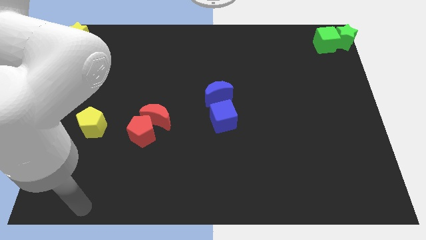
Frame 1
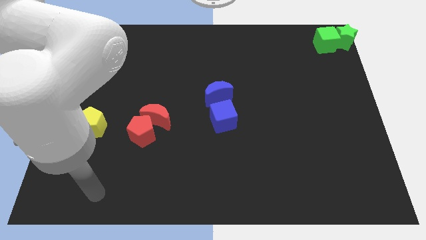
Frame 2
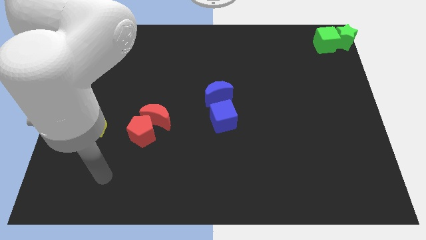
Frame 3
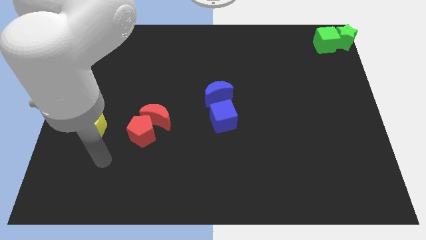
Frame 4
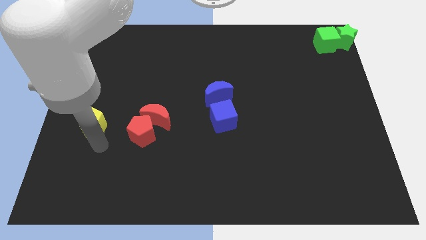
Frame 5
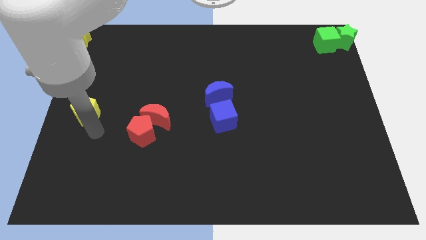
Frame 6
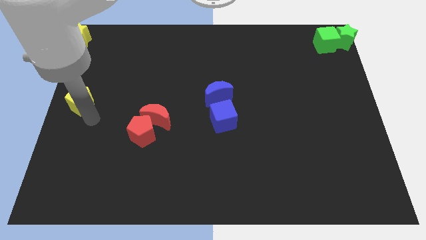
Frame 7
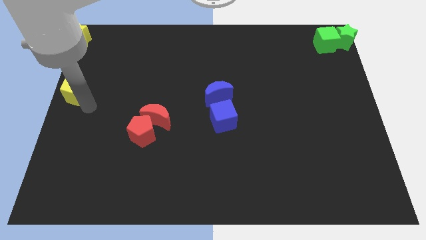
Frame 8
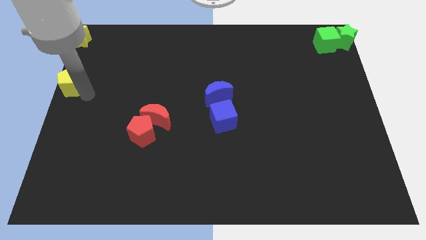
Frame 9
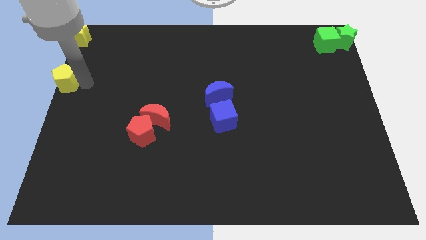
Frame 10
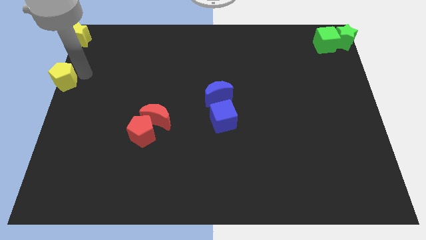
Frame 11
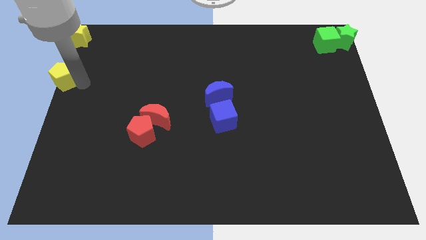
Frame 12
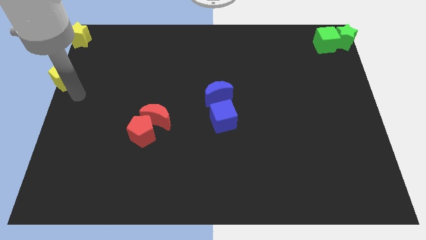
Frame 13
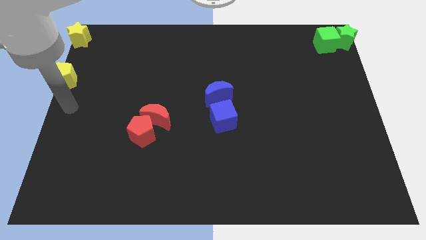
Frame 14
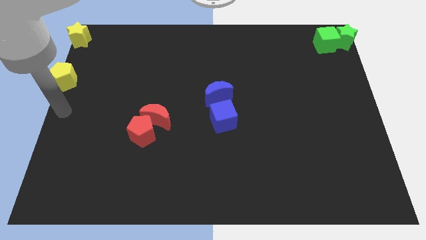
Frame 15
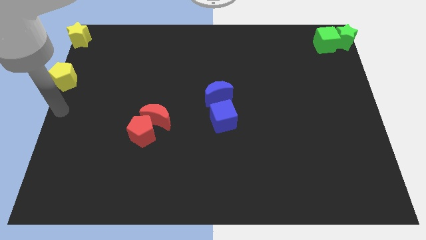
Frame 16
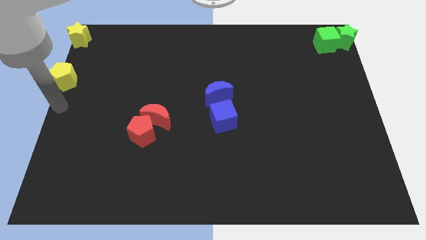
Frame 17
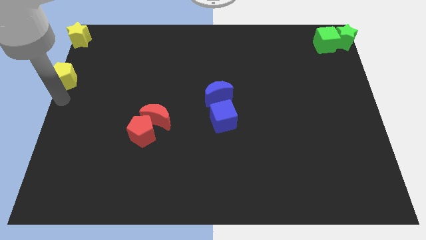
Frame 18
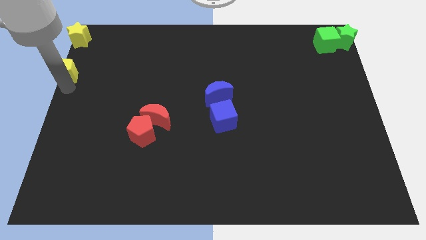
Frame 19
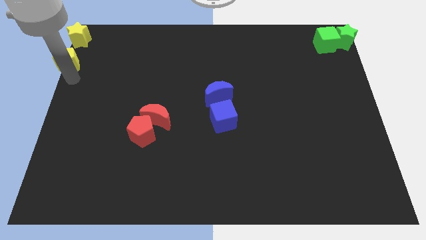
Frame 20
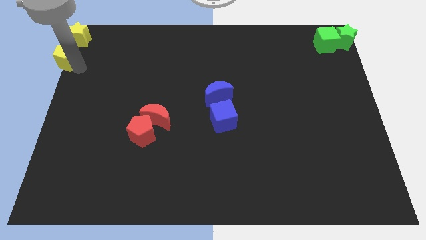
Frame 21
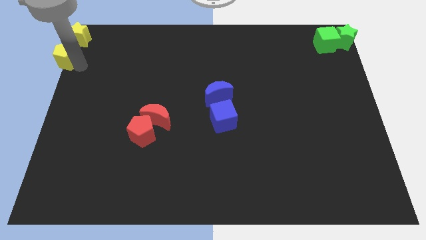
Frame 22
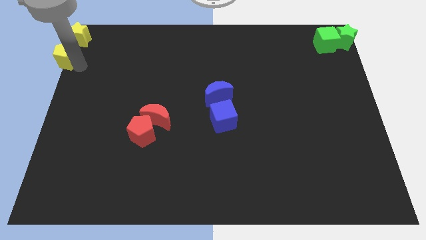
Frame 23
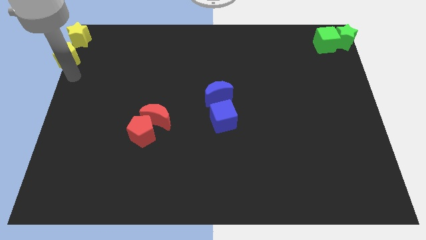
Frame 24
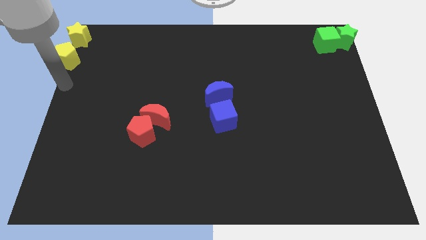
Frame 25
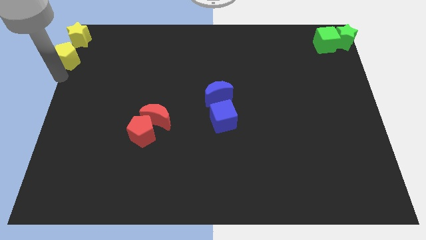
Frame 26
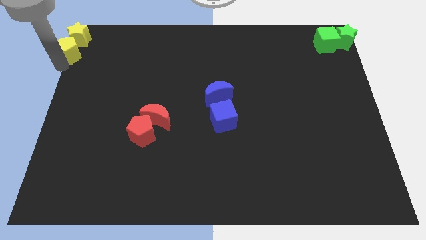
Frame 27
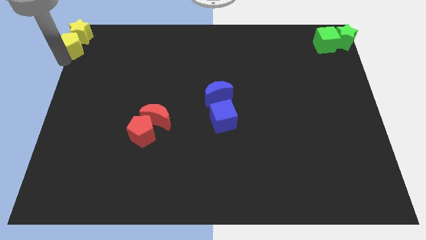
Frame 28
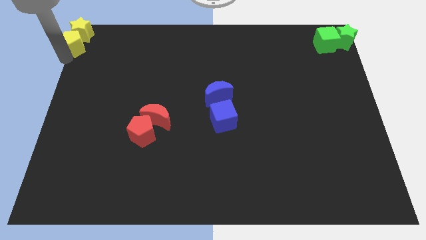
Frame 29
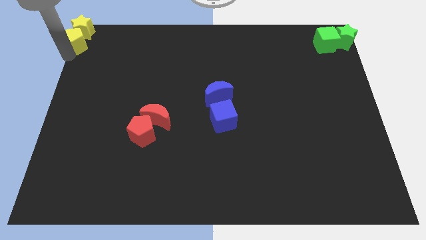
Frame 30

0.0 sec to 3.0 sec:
push the yellow pentagon into yellow star

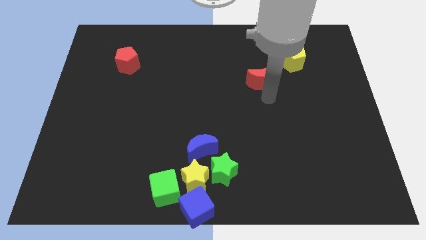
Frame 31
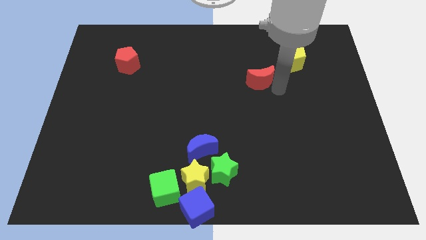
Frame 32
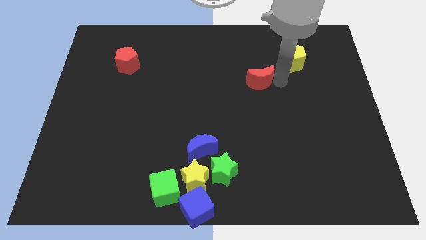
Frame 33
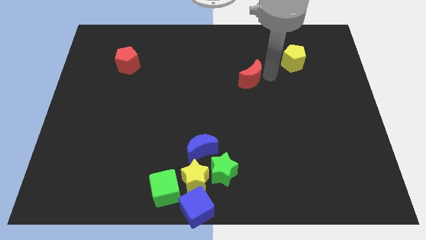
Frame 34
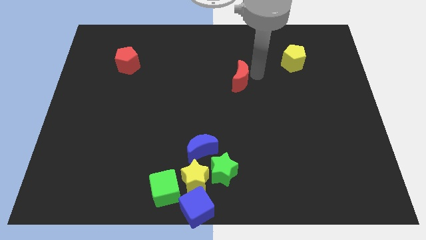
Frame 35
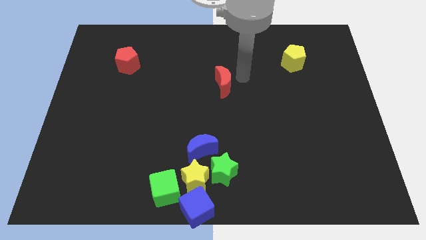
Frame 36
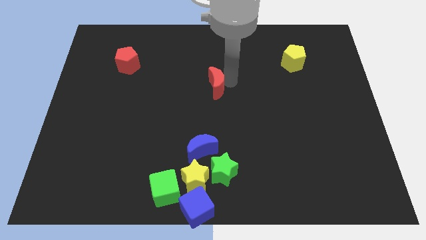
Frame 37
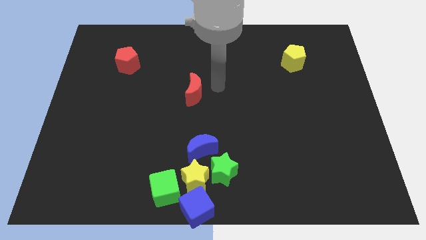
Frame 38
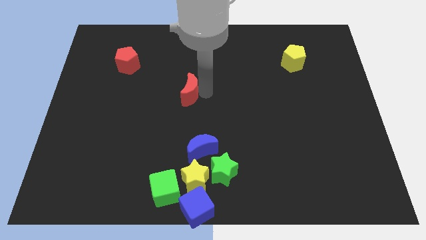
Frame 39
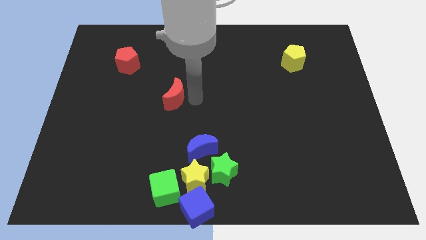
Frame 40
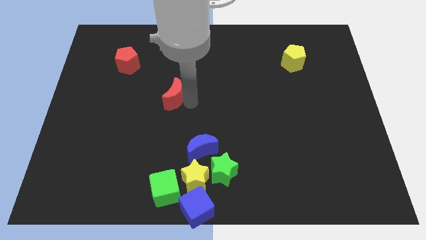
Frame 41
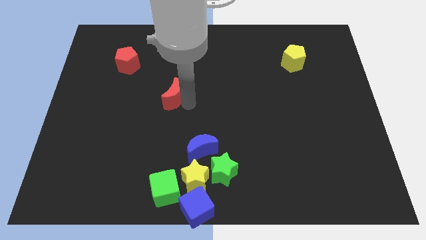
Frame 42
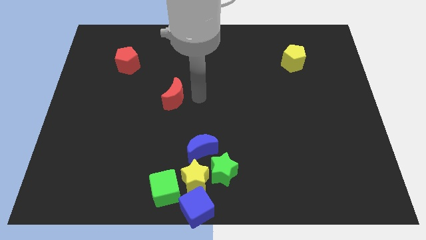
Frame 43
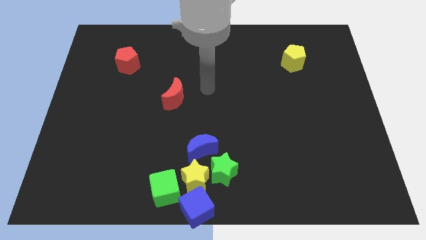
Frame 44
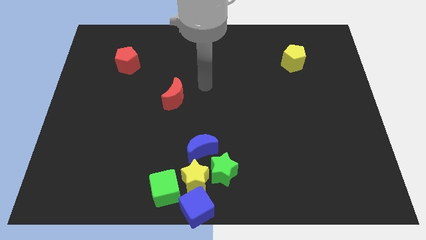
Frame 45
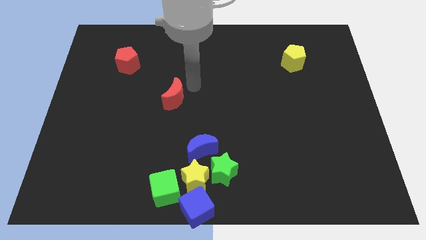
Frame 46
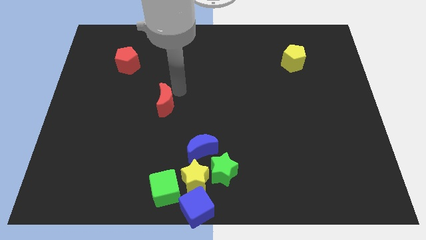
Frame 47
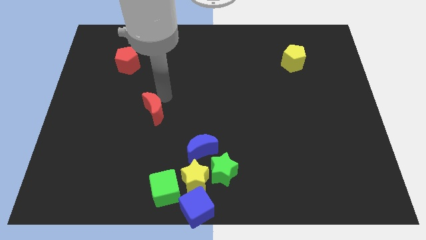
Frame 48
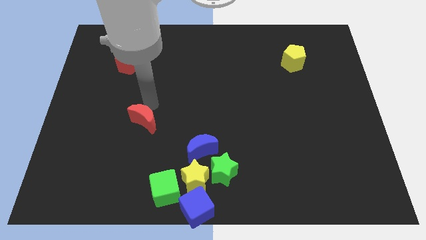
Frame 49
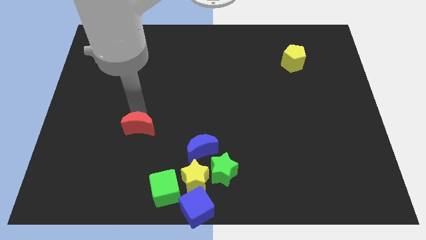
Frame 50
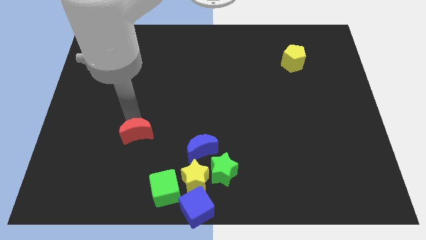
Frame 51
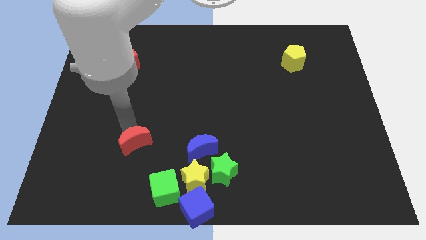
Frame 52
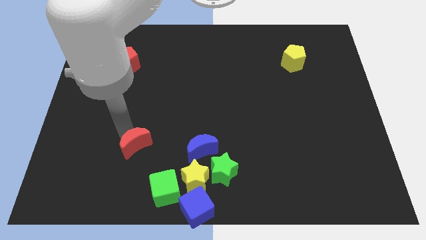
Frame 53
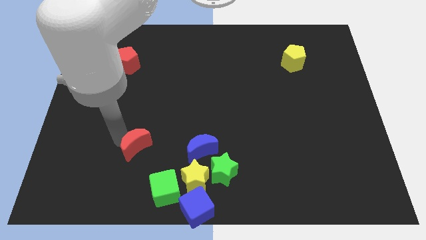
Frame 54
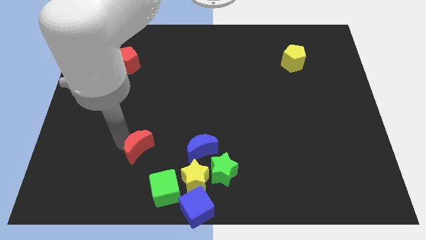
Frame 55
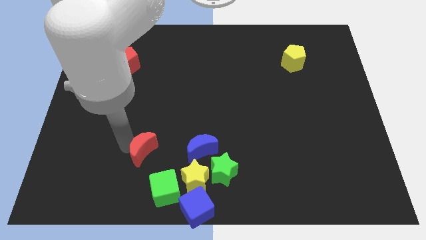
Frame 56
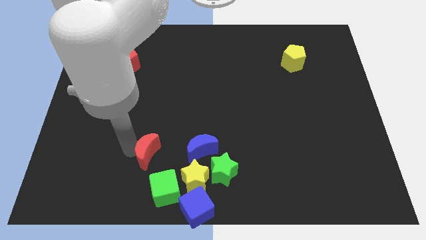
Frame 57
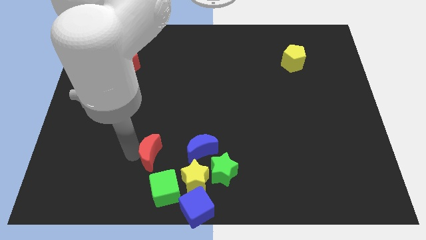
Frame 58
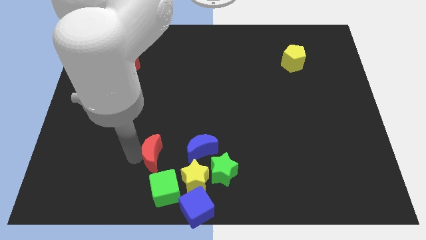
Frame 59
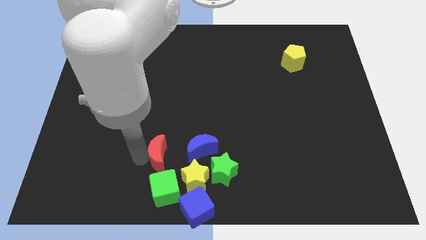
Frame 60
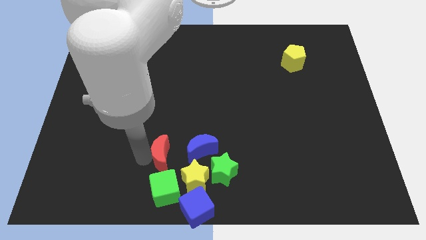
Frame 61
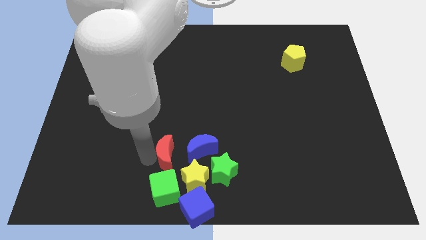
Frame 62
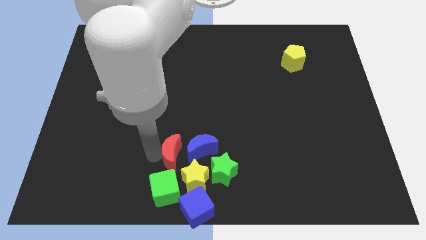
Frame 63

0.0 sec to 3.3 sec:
move the red crescent to the top of green cube

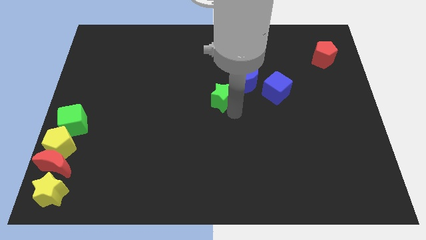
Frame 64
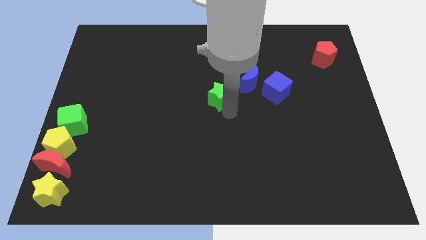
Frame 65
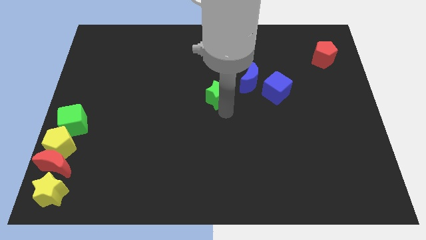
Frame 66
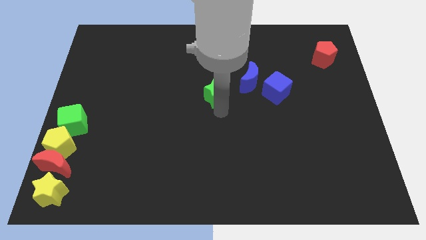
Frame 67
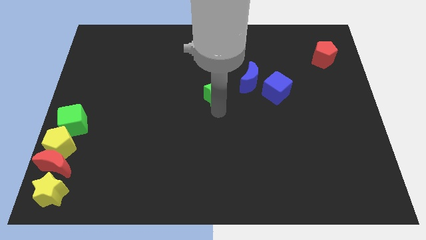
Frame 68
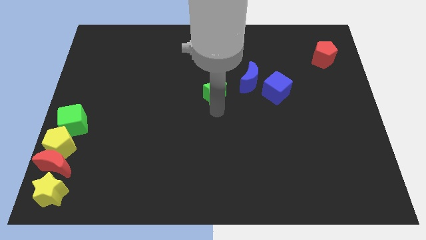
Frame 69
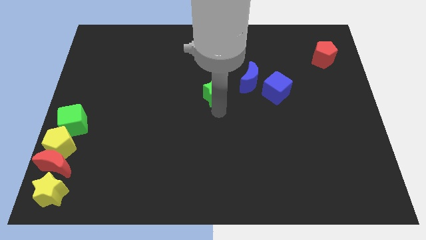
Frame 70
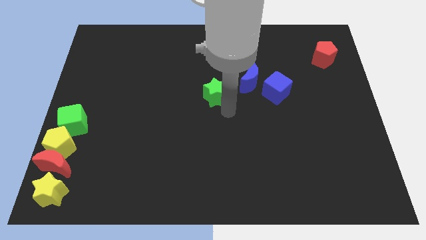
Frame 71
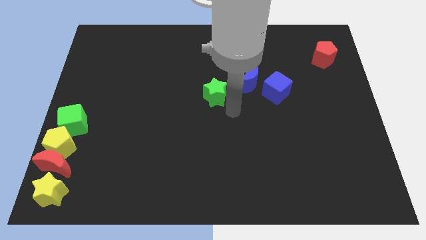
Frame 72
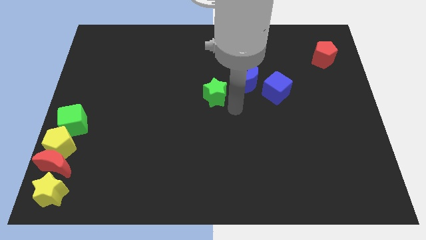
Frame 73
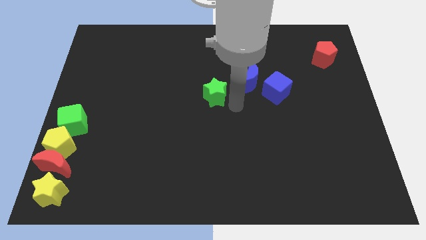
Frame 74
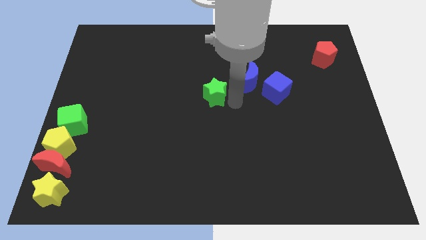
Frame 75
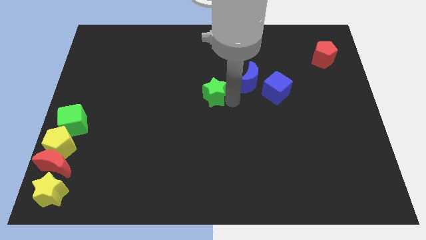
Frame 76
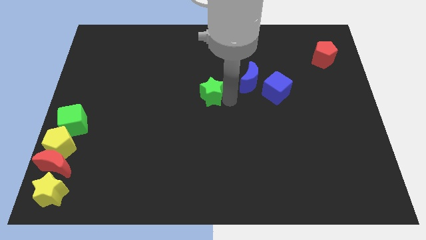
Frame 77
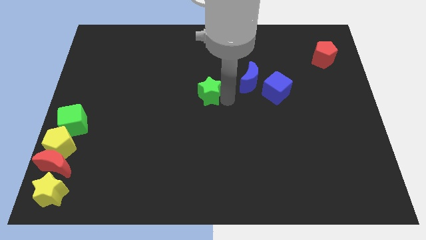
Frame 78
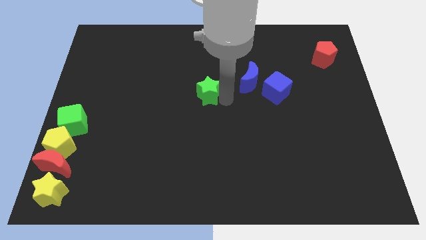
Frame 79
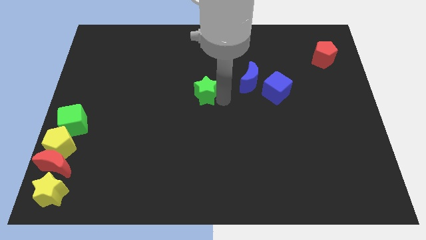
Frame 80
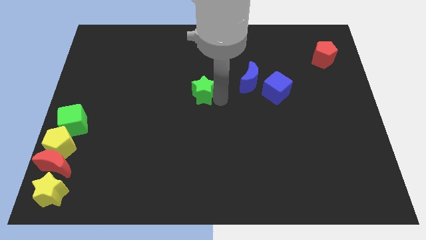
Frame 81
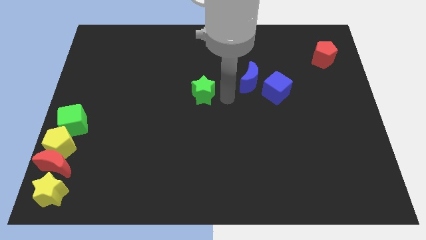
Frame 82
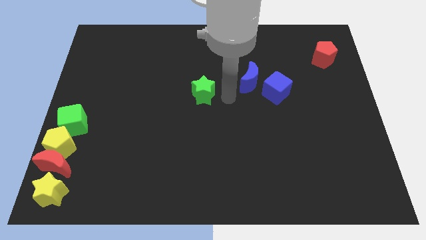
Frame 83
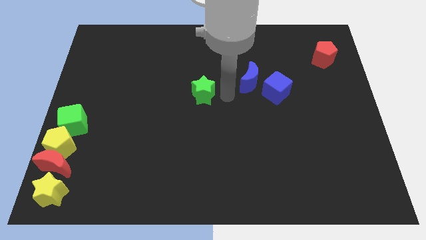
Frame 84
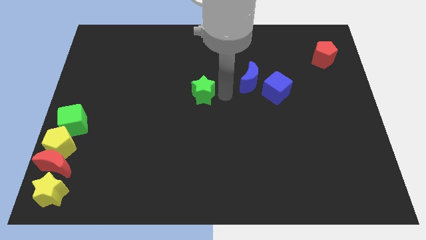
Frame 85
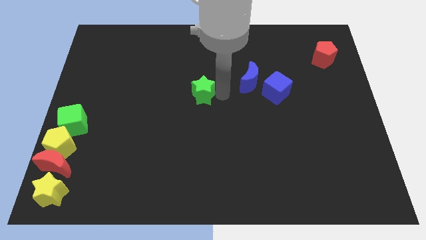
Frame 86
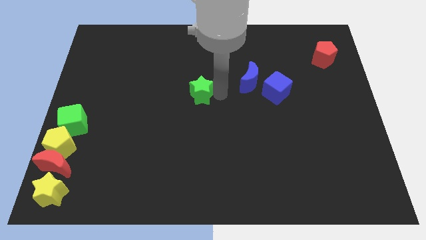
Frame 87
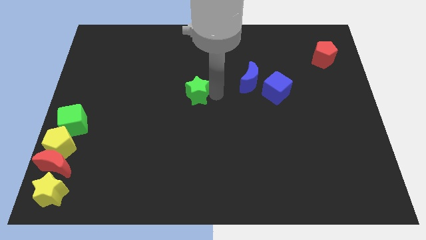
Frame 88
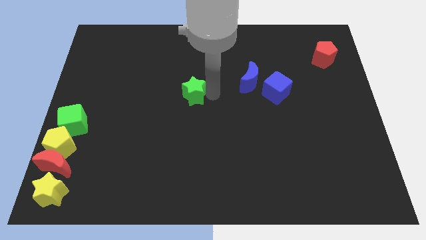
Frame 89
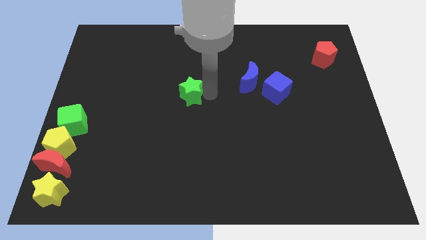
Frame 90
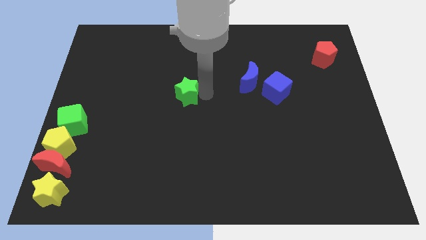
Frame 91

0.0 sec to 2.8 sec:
push green star slightly towards left
